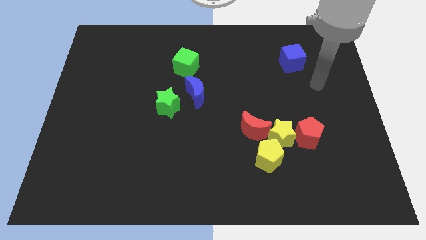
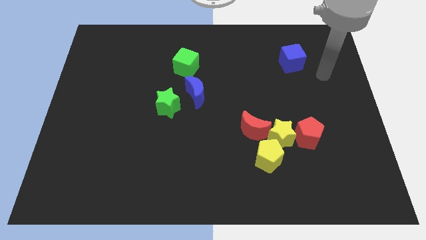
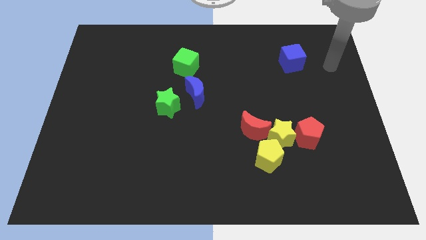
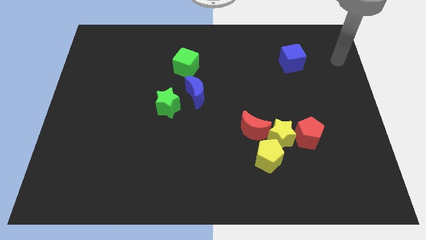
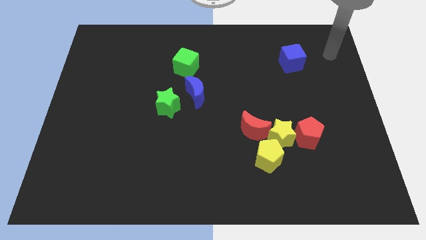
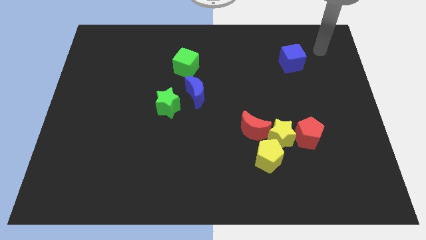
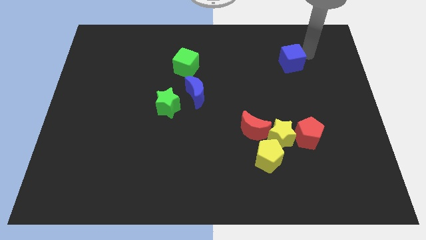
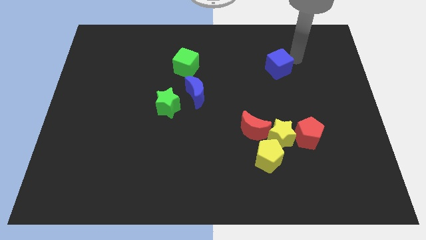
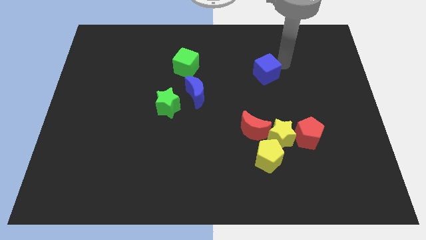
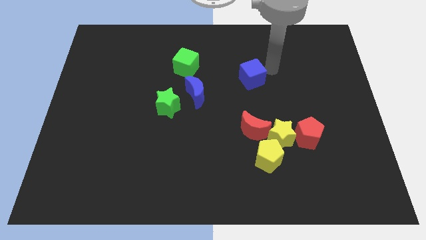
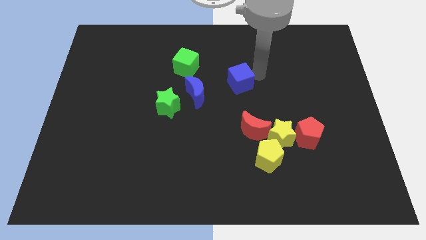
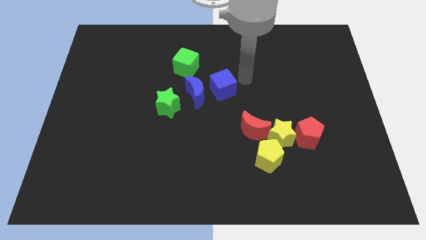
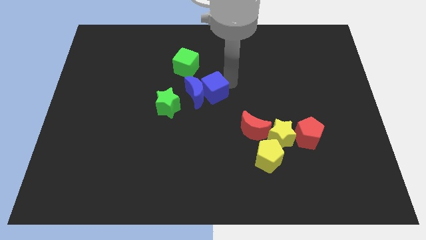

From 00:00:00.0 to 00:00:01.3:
move the blue cube to the right side of the blue moon

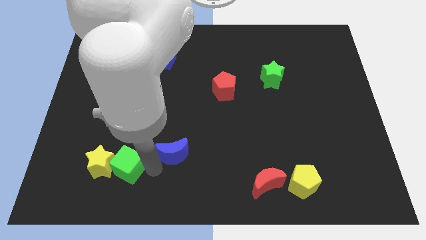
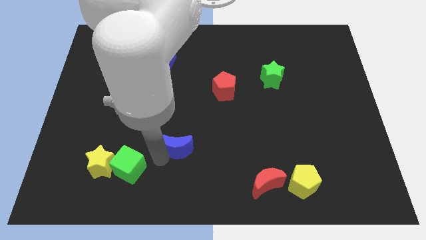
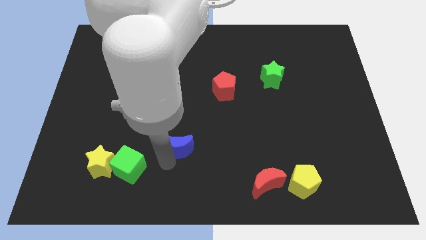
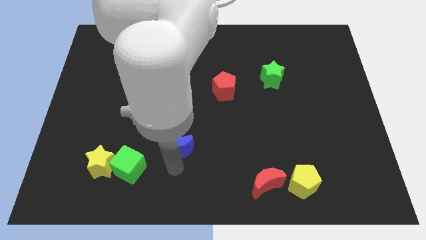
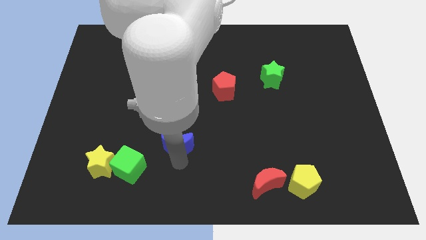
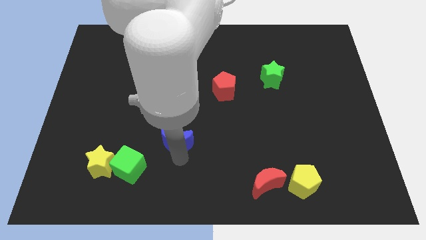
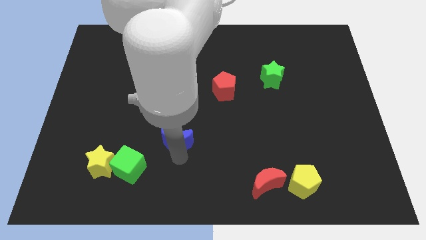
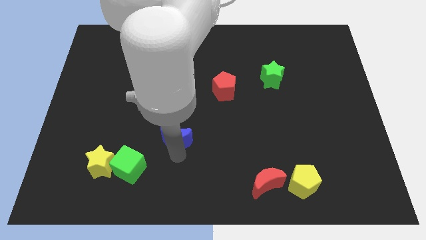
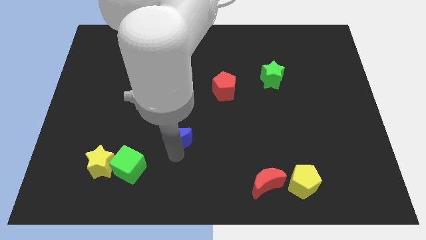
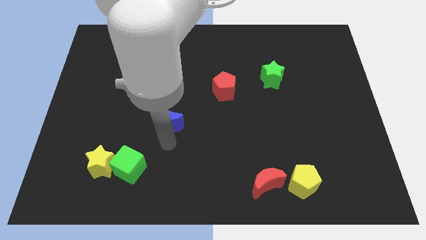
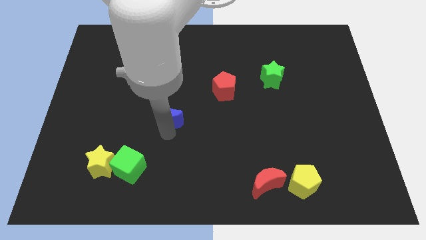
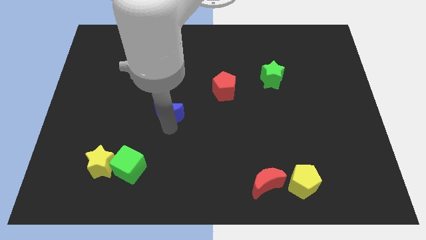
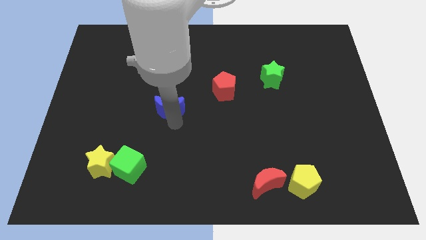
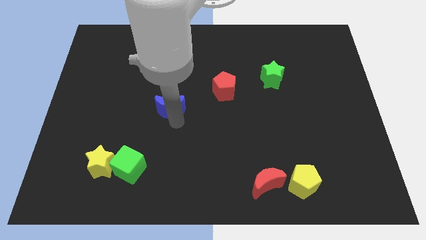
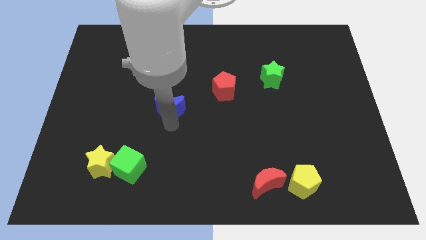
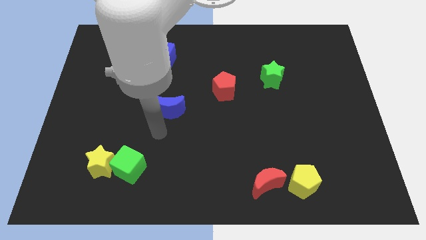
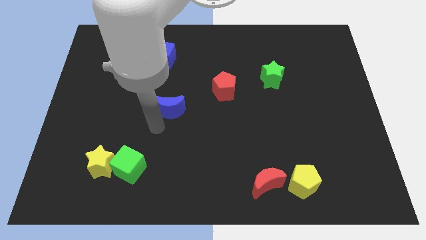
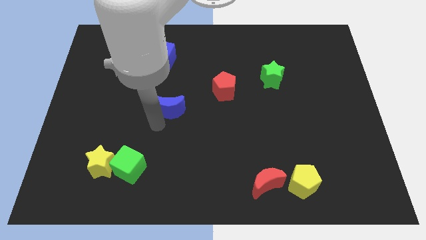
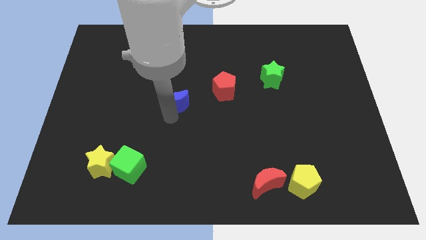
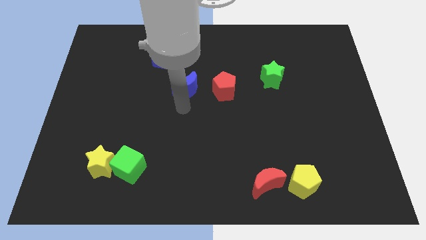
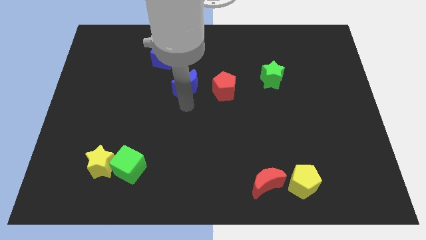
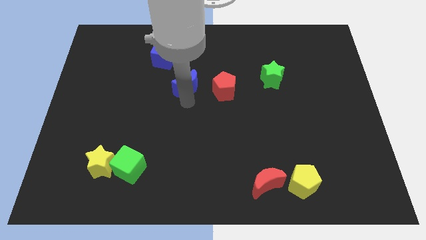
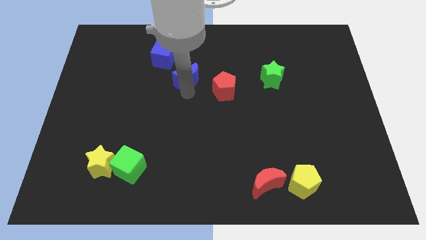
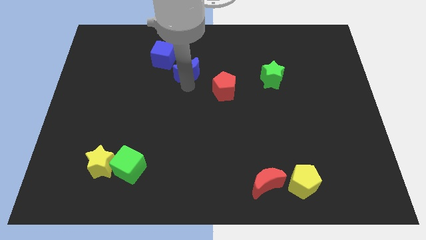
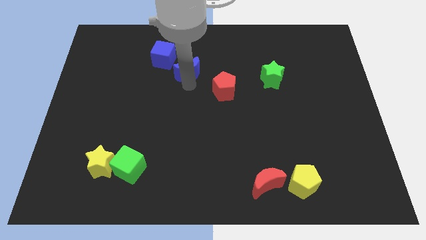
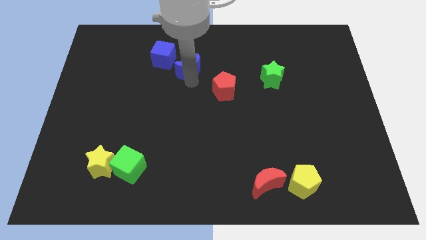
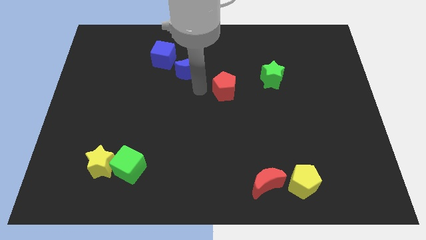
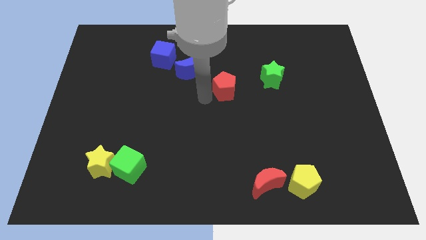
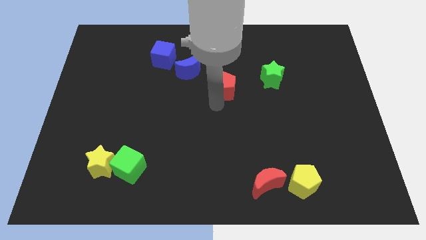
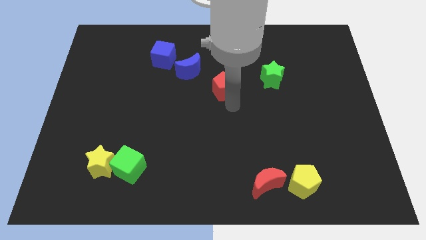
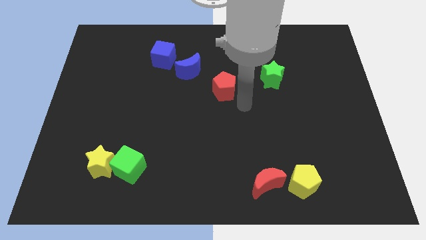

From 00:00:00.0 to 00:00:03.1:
place the blue crescent at the right side of the blue cube

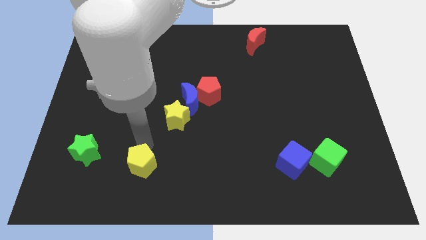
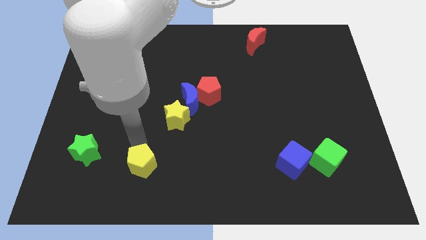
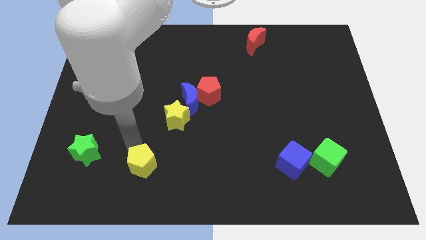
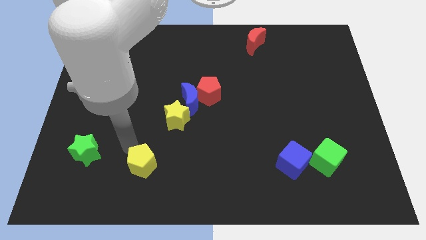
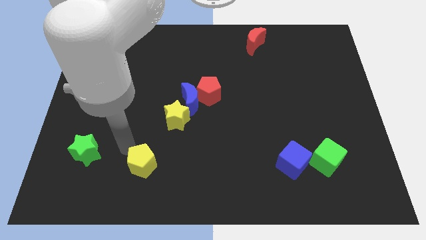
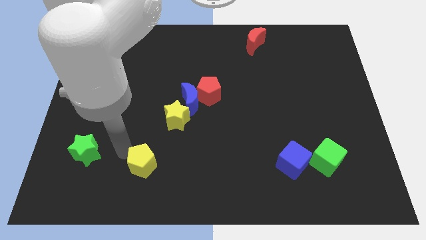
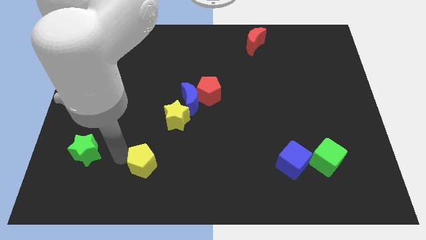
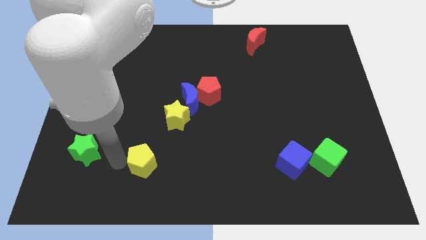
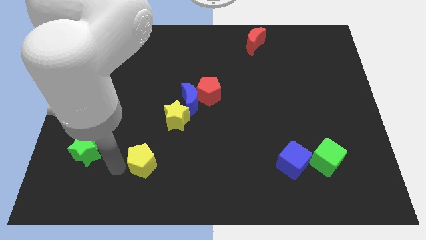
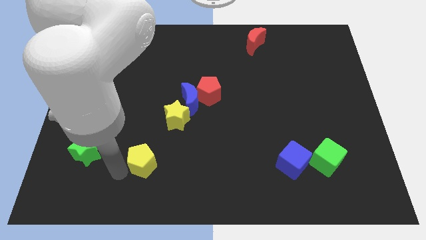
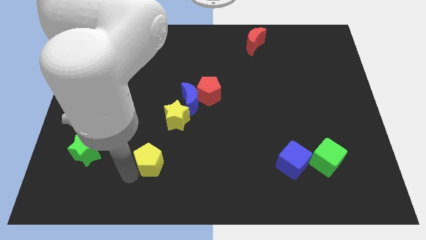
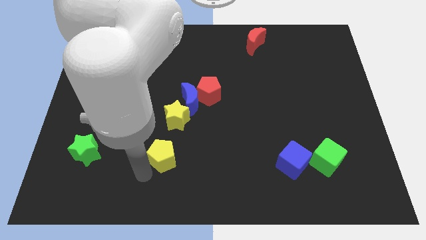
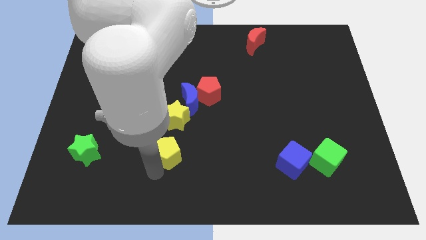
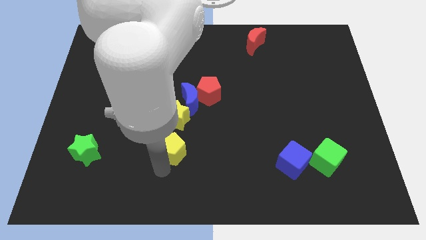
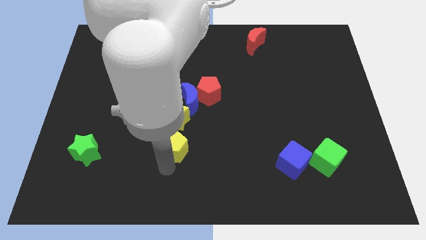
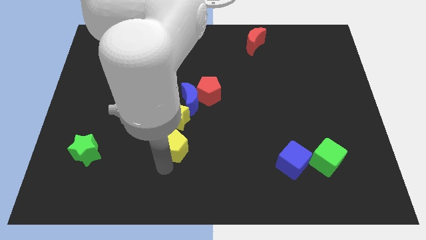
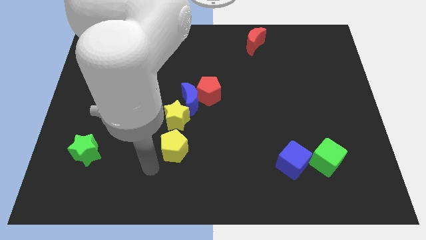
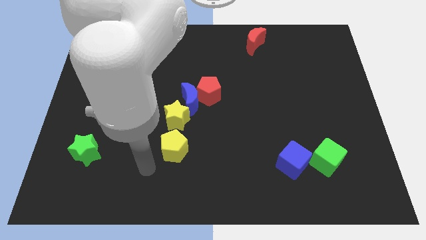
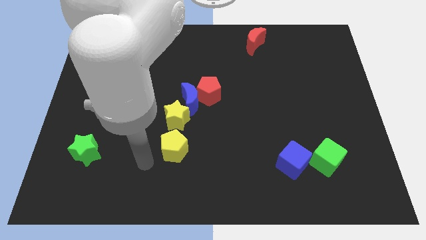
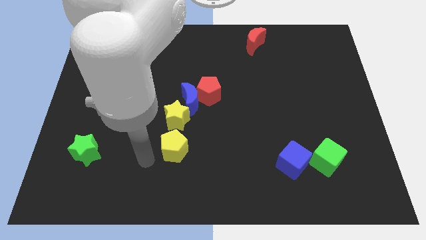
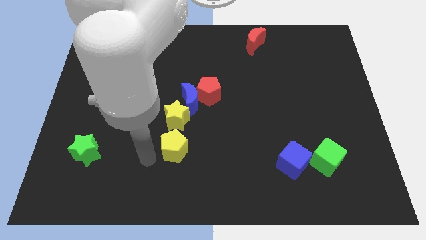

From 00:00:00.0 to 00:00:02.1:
move the yellow pentagon to the bottom of the yellow star

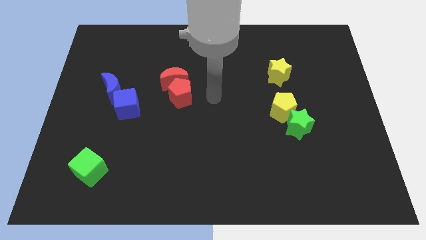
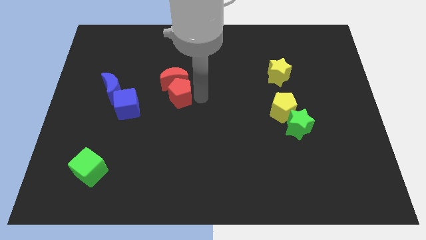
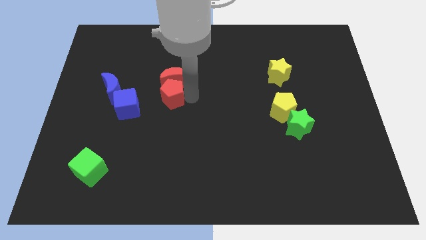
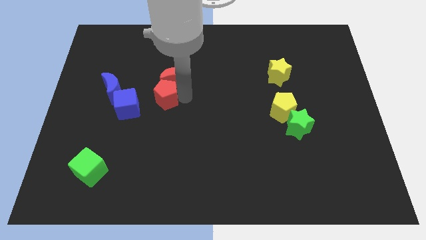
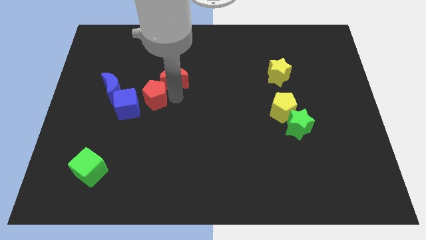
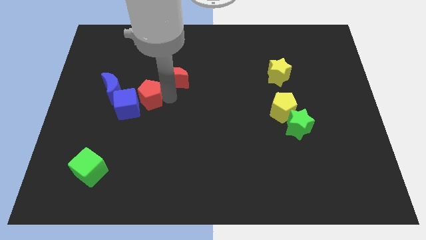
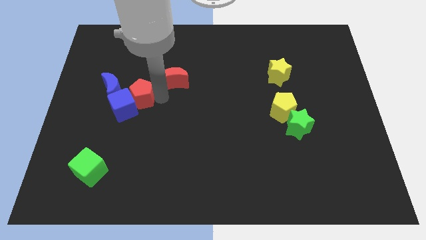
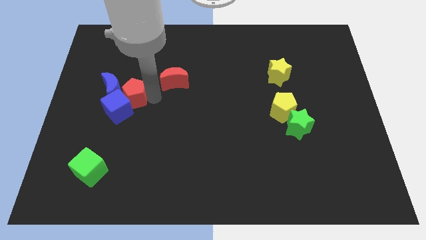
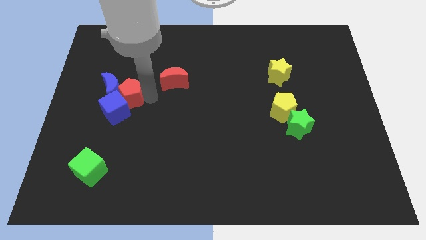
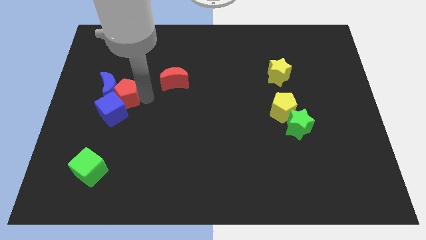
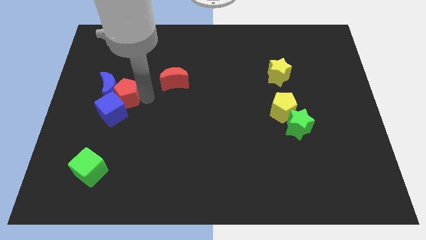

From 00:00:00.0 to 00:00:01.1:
move red pentagon into the blue cube

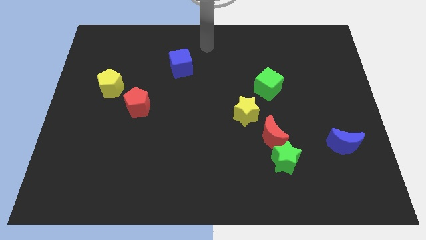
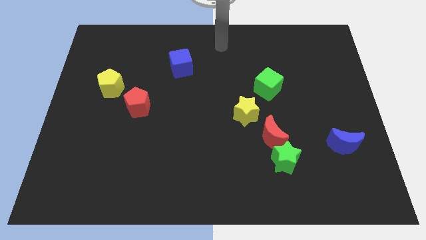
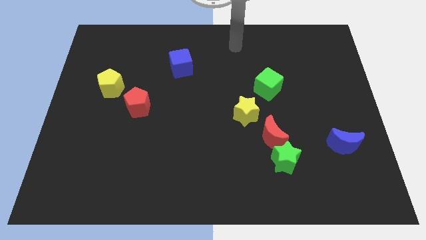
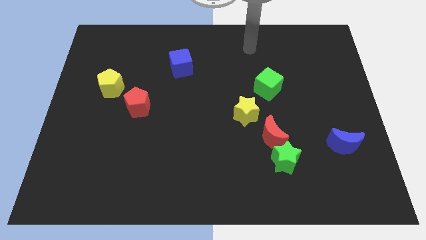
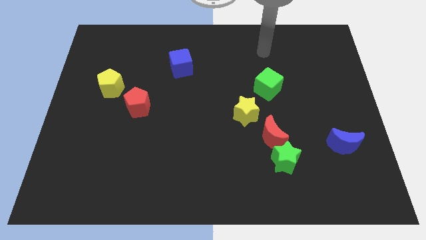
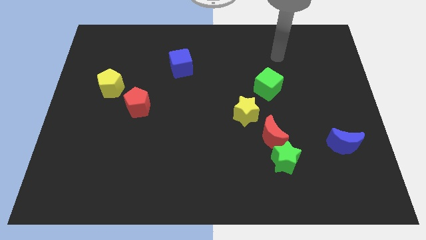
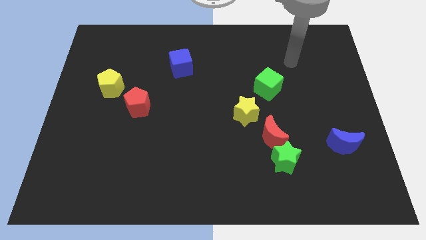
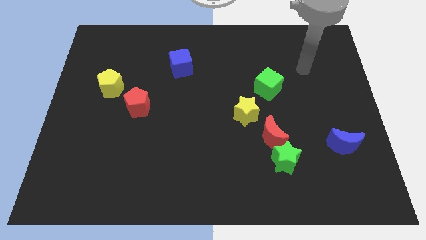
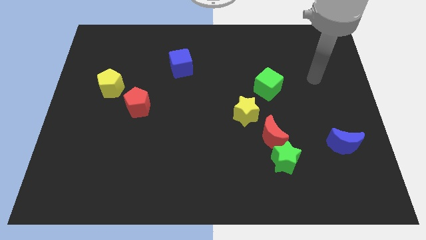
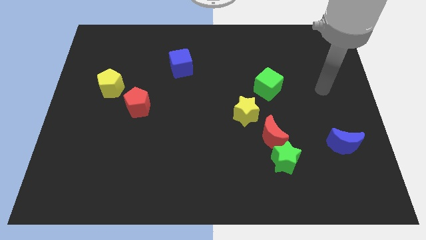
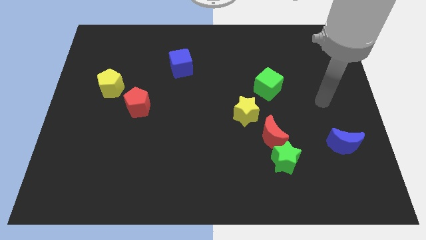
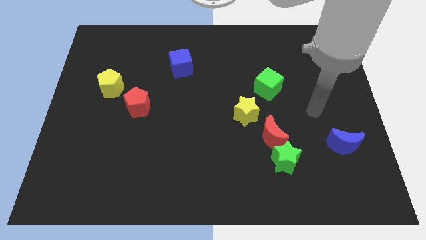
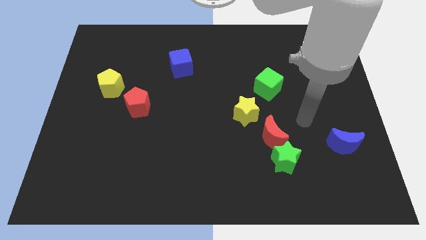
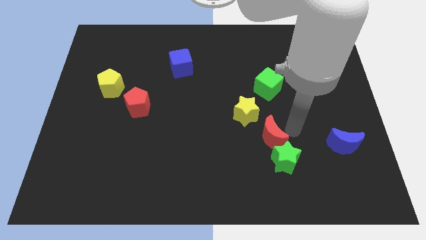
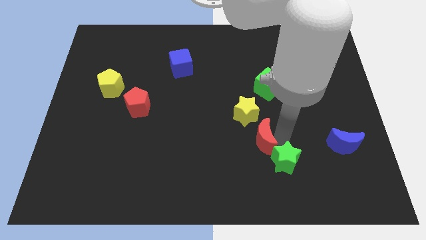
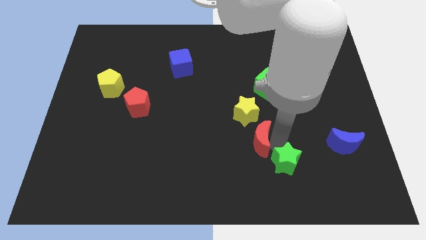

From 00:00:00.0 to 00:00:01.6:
separate the red moon from the green star
